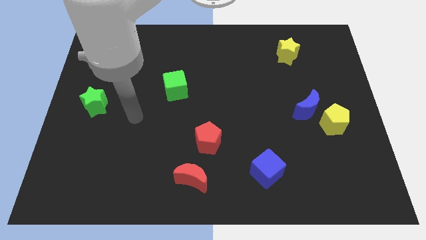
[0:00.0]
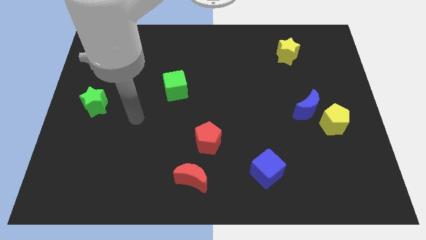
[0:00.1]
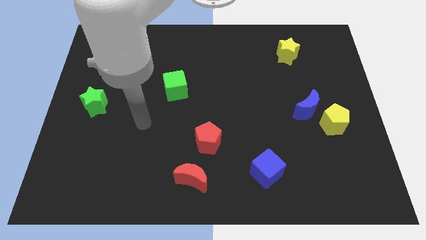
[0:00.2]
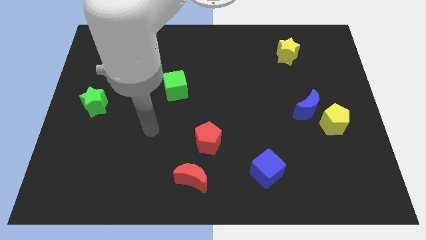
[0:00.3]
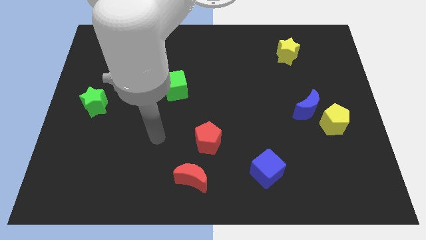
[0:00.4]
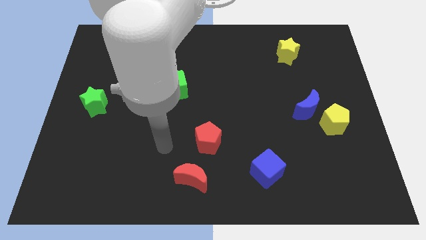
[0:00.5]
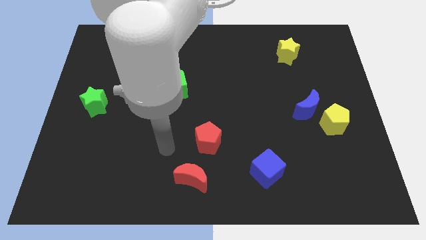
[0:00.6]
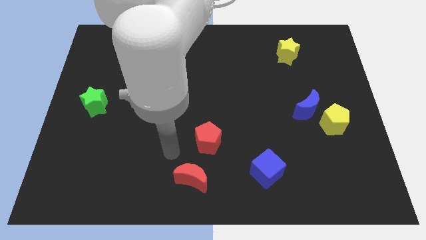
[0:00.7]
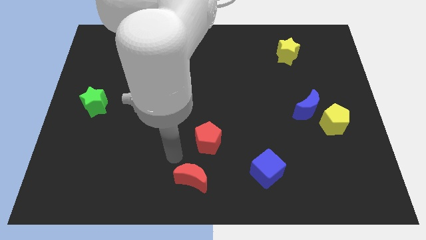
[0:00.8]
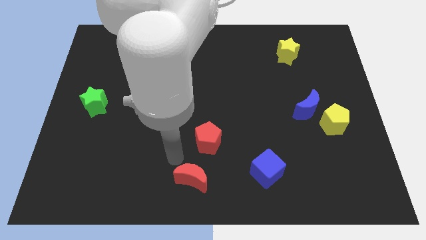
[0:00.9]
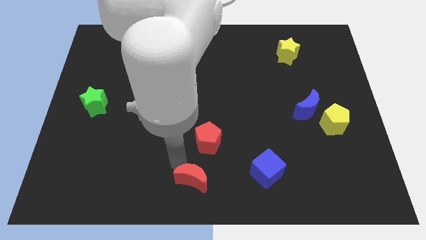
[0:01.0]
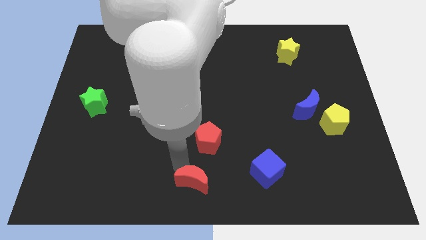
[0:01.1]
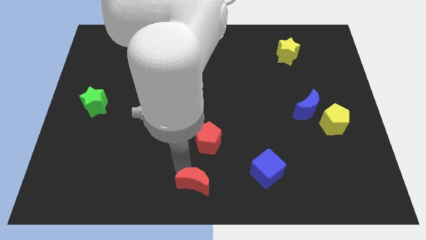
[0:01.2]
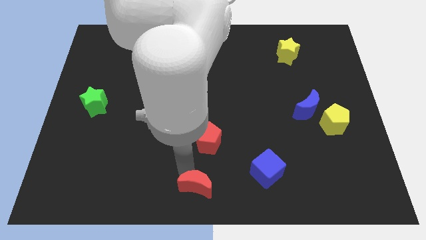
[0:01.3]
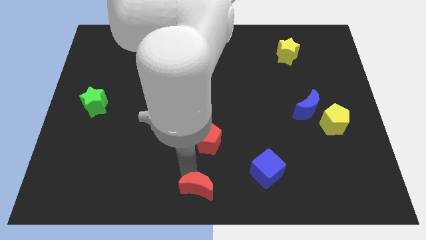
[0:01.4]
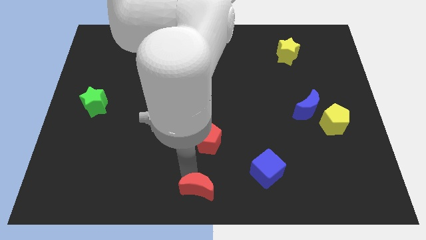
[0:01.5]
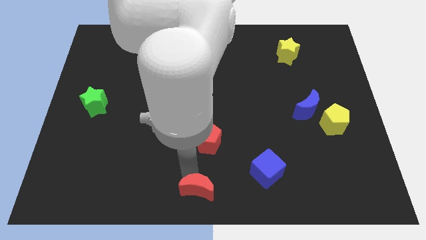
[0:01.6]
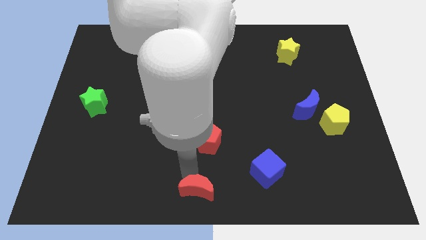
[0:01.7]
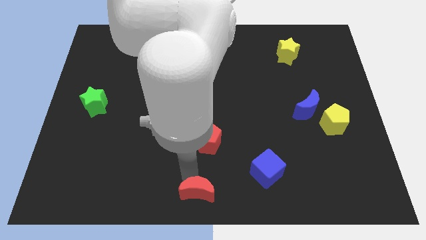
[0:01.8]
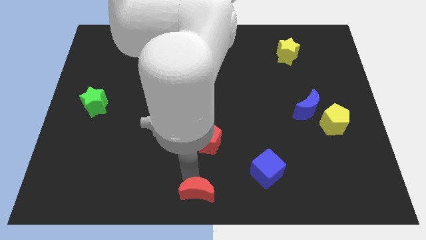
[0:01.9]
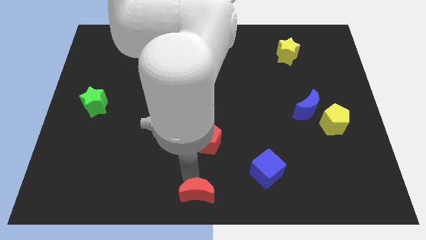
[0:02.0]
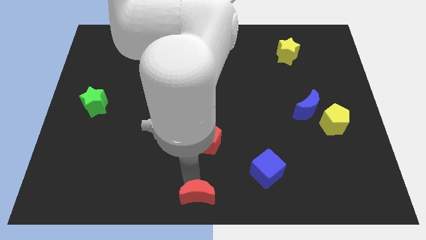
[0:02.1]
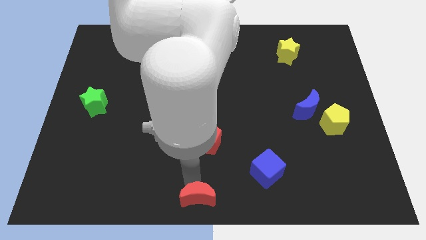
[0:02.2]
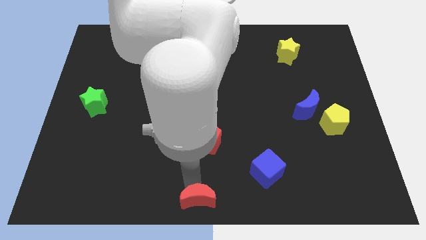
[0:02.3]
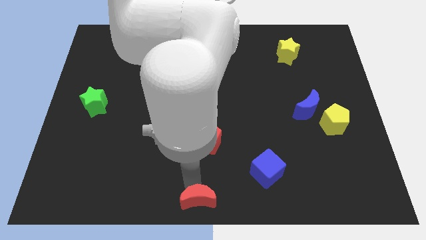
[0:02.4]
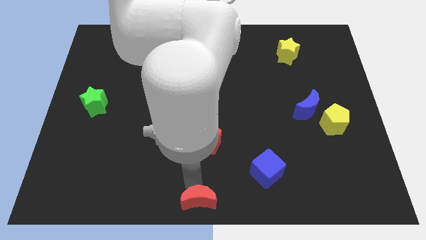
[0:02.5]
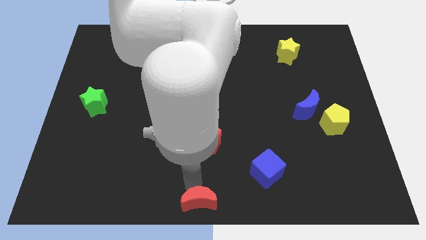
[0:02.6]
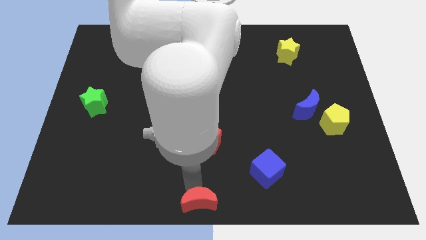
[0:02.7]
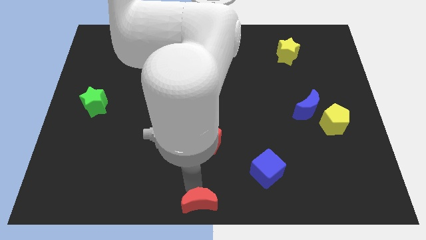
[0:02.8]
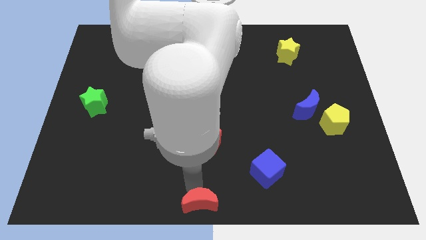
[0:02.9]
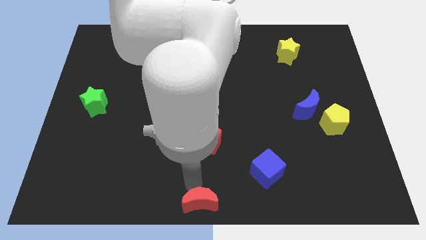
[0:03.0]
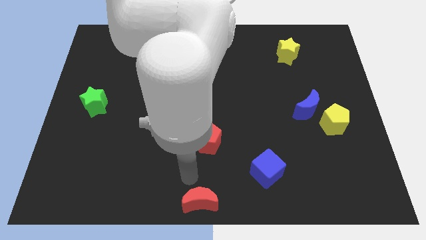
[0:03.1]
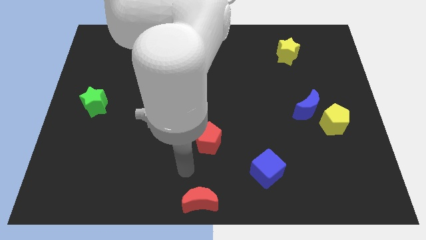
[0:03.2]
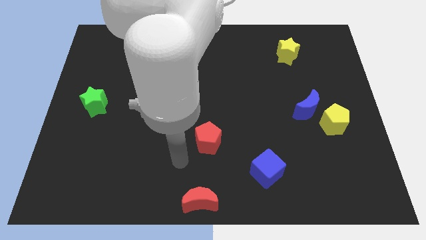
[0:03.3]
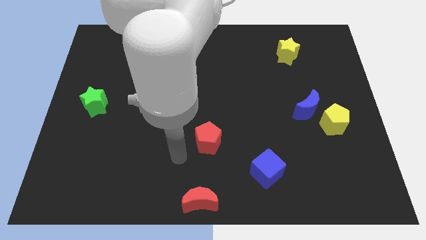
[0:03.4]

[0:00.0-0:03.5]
push red half moon to bottom center of the board

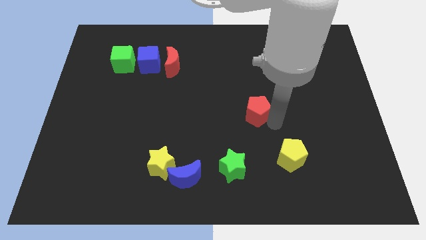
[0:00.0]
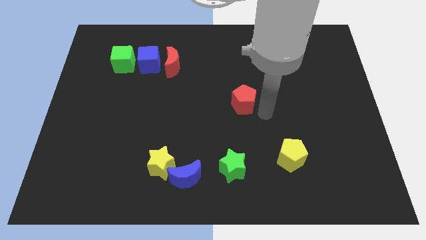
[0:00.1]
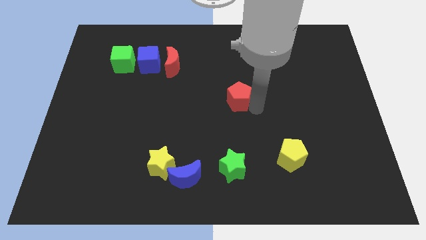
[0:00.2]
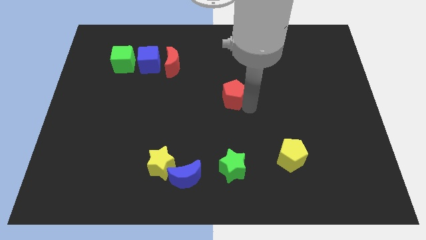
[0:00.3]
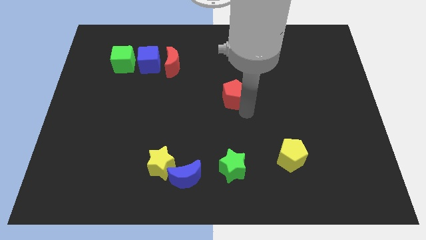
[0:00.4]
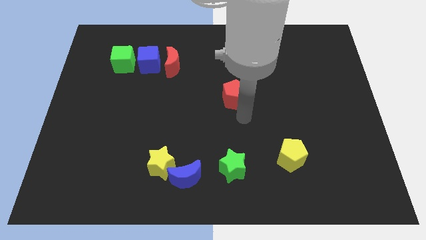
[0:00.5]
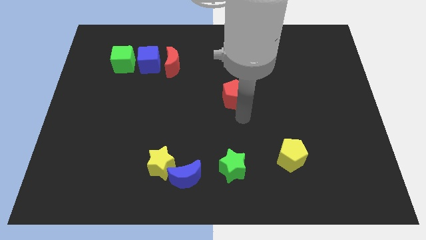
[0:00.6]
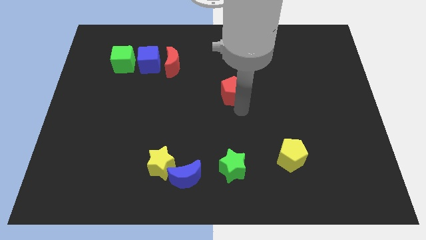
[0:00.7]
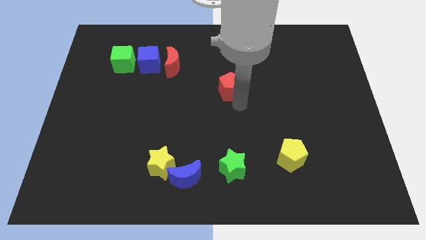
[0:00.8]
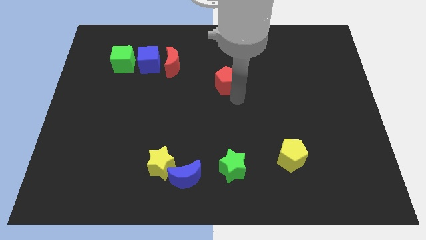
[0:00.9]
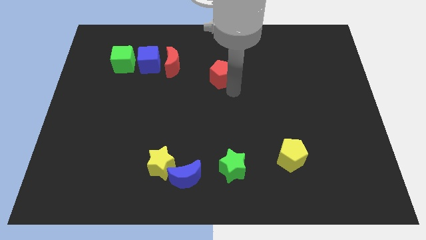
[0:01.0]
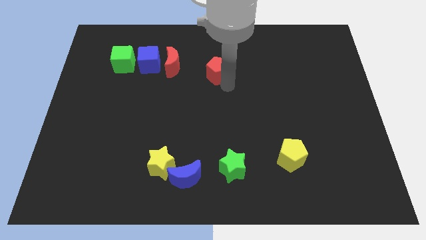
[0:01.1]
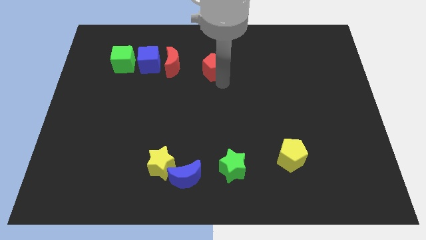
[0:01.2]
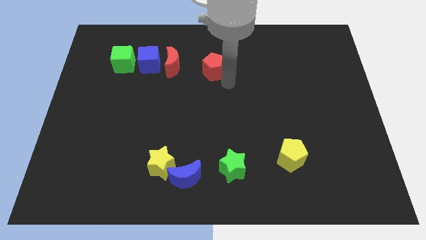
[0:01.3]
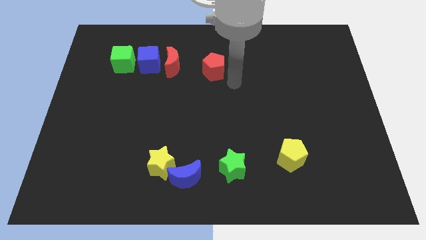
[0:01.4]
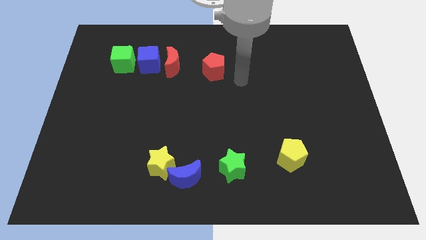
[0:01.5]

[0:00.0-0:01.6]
move red pentagon to the right of red moon

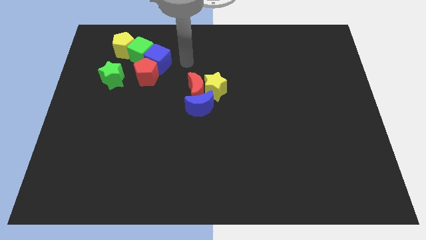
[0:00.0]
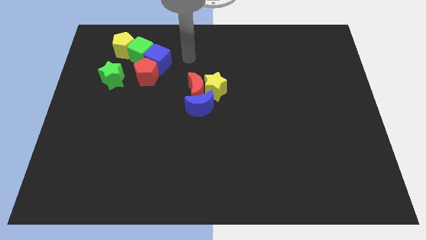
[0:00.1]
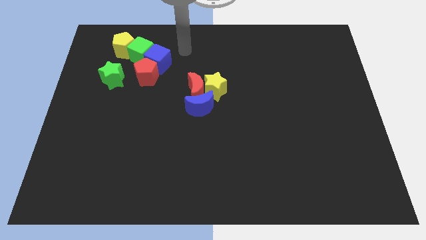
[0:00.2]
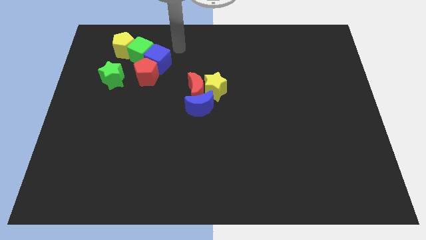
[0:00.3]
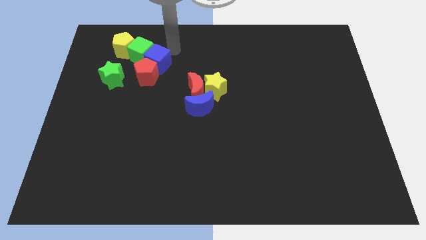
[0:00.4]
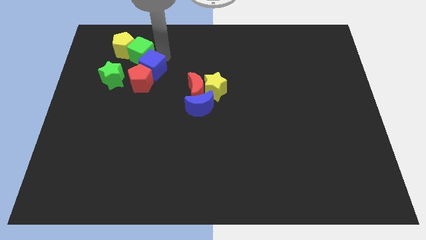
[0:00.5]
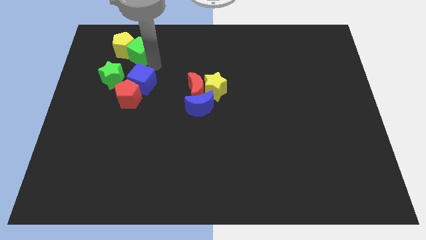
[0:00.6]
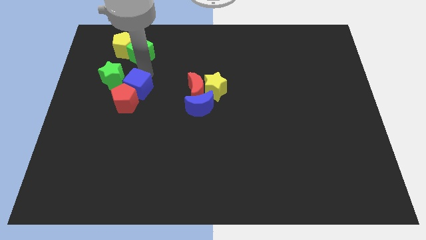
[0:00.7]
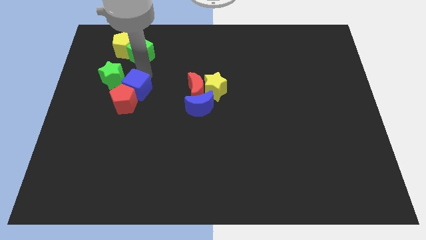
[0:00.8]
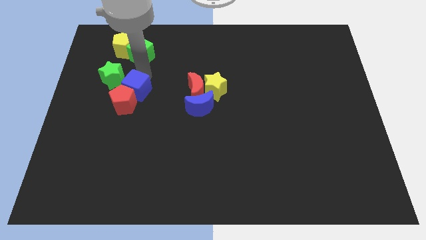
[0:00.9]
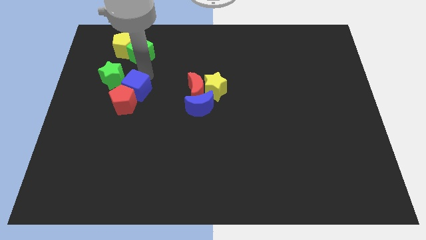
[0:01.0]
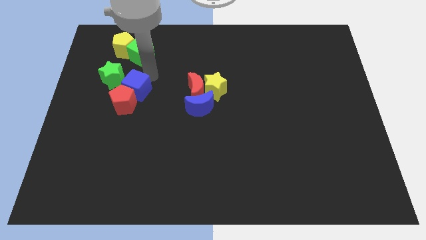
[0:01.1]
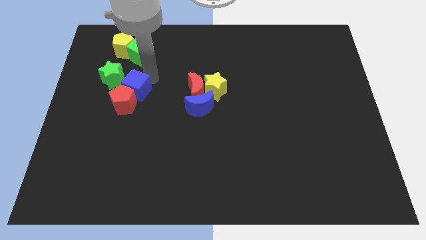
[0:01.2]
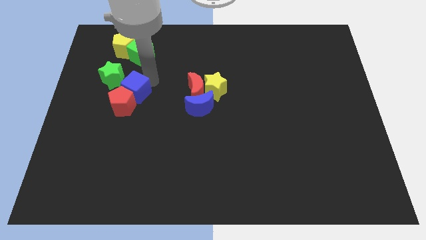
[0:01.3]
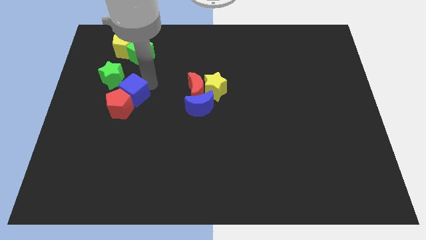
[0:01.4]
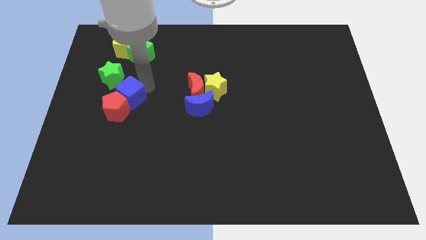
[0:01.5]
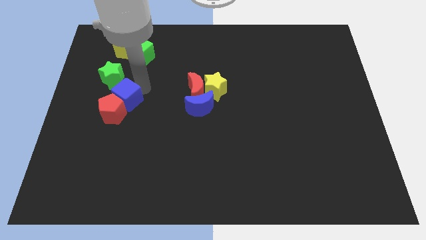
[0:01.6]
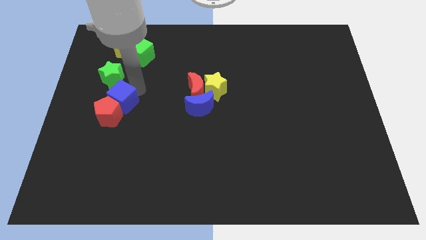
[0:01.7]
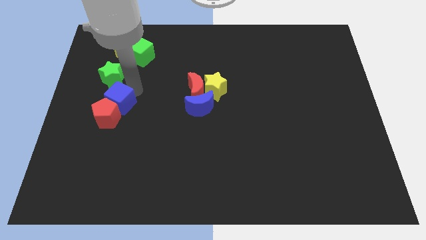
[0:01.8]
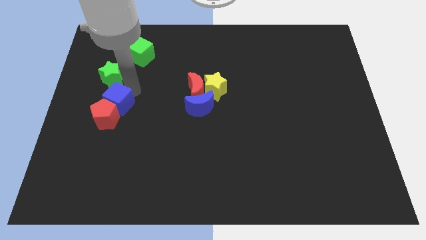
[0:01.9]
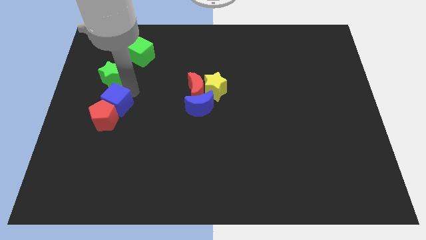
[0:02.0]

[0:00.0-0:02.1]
push the blue cube into the red pentagon

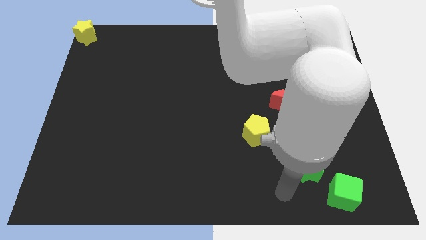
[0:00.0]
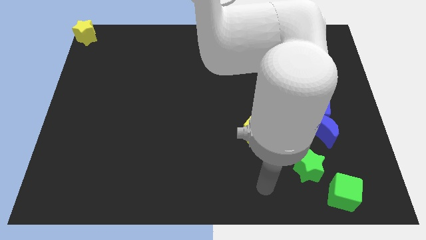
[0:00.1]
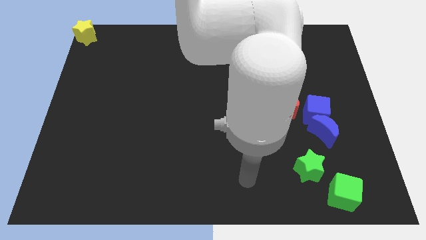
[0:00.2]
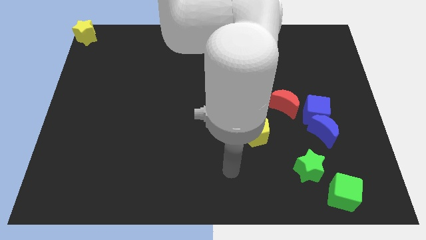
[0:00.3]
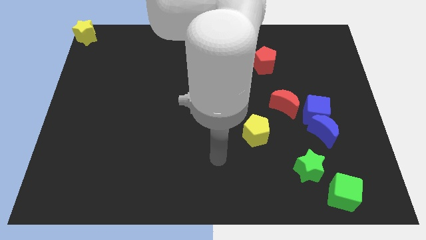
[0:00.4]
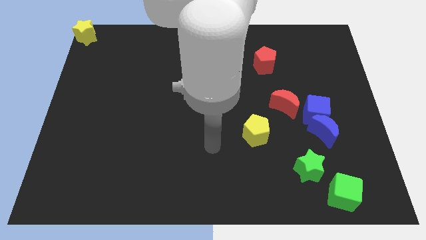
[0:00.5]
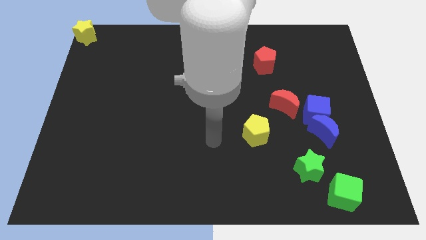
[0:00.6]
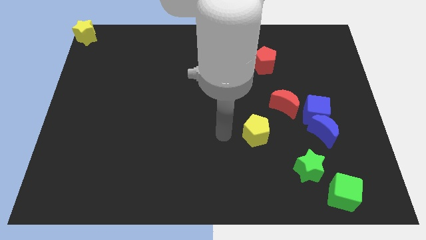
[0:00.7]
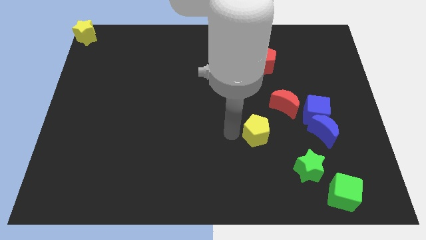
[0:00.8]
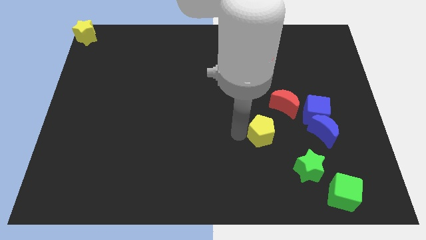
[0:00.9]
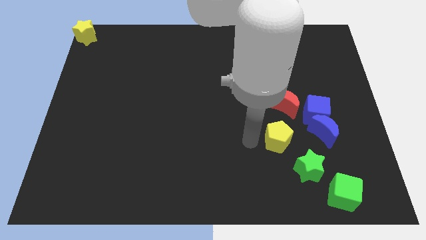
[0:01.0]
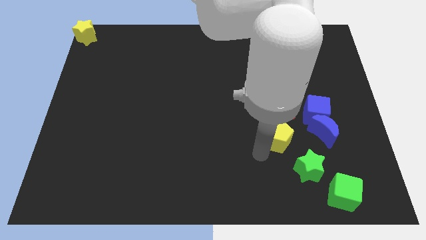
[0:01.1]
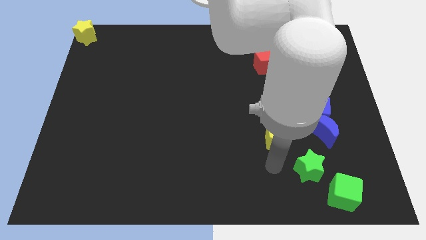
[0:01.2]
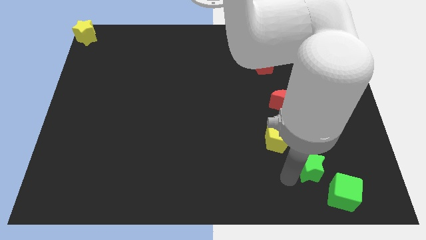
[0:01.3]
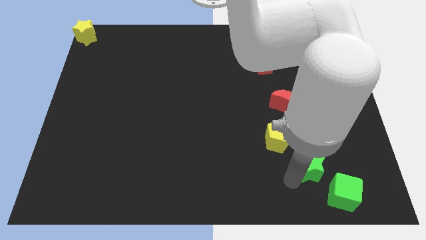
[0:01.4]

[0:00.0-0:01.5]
push the yellow pentagon towards the green star
